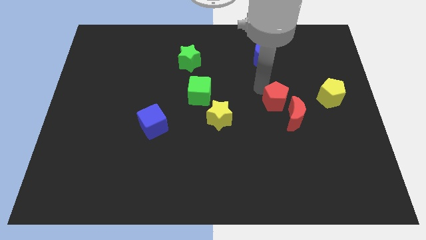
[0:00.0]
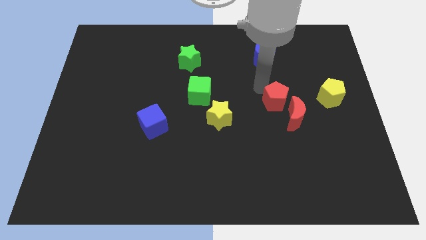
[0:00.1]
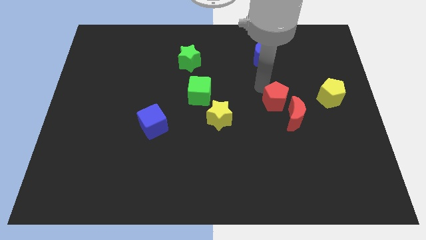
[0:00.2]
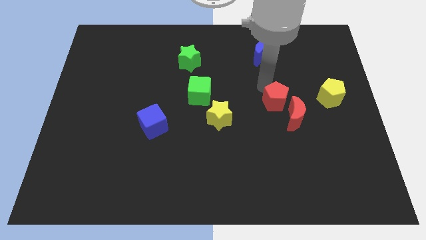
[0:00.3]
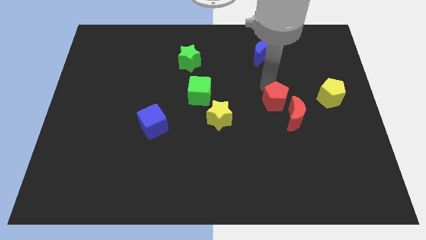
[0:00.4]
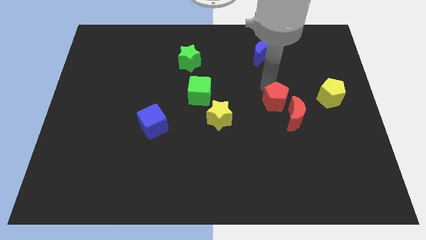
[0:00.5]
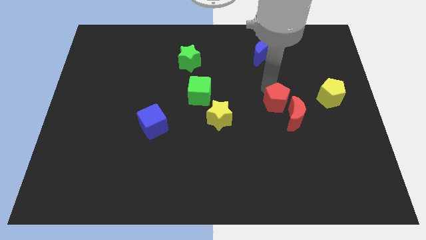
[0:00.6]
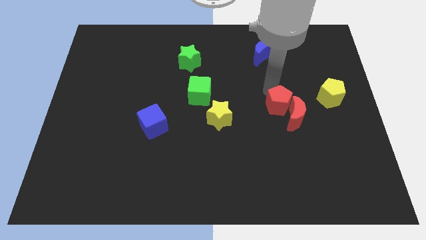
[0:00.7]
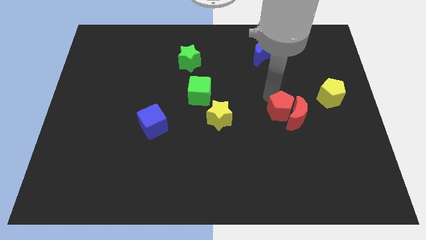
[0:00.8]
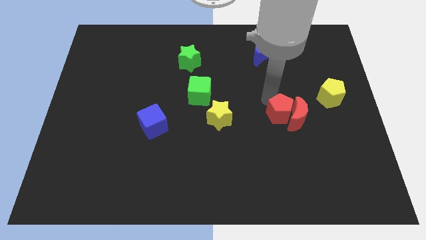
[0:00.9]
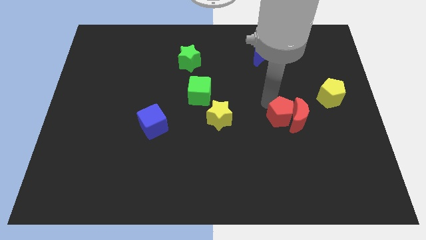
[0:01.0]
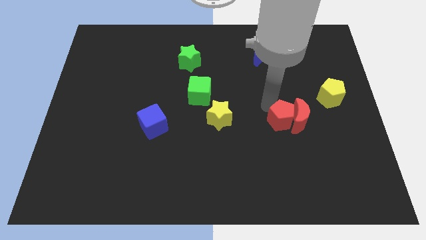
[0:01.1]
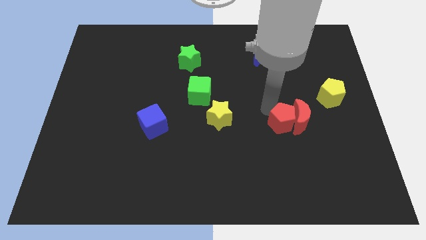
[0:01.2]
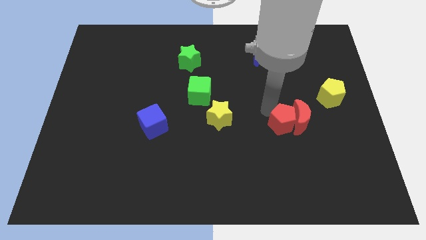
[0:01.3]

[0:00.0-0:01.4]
move the red pentagon into red crescent

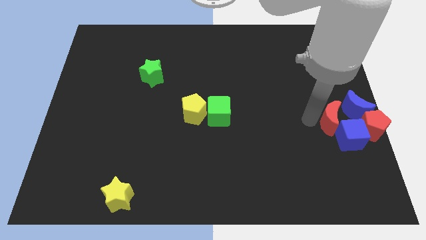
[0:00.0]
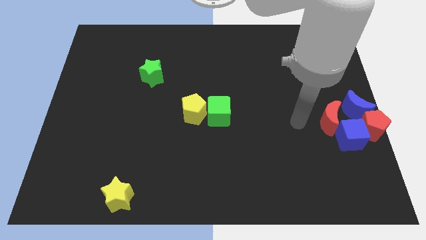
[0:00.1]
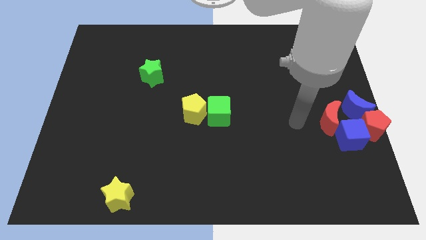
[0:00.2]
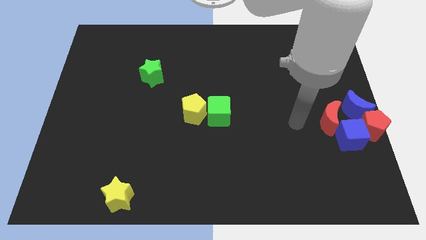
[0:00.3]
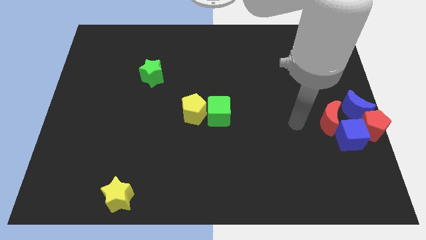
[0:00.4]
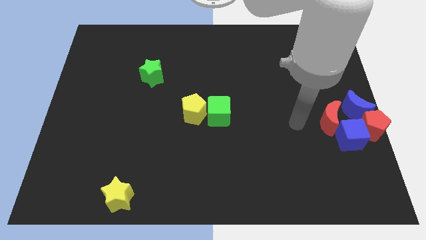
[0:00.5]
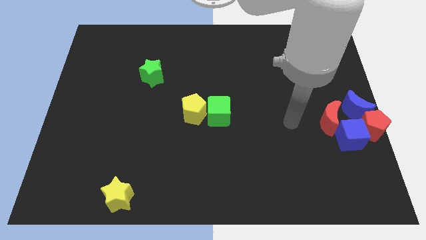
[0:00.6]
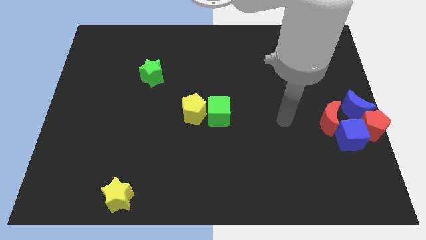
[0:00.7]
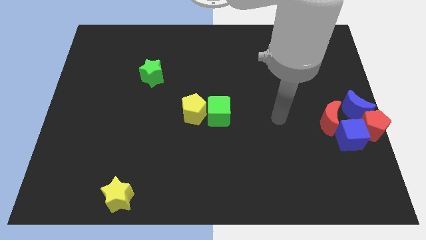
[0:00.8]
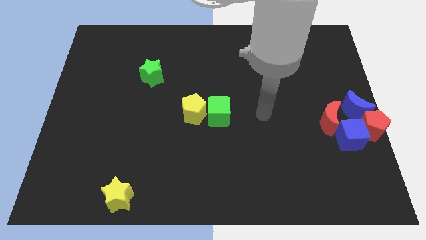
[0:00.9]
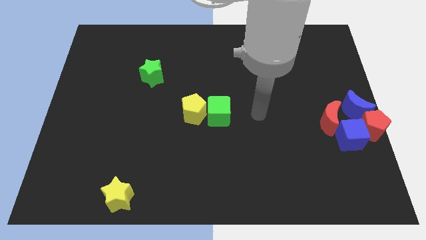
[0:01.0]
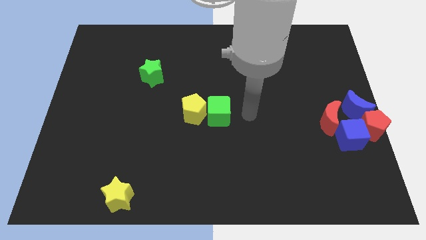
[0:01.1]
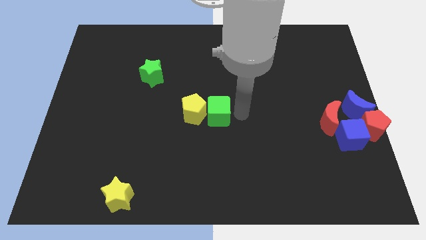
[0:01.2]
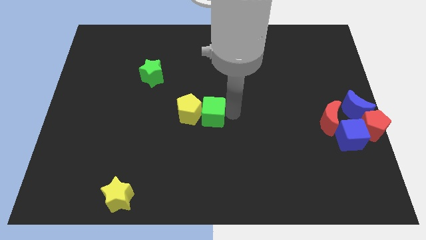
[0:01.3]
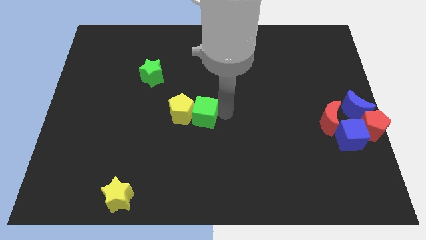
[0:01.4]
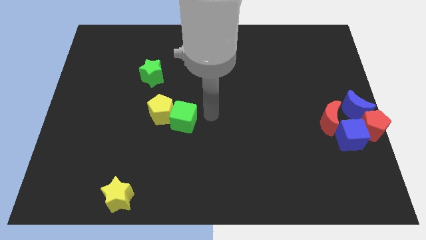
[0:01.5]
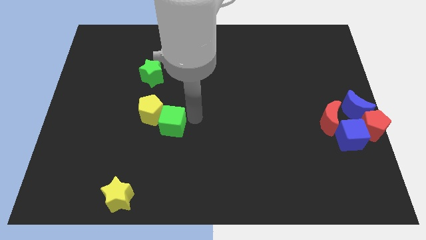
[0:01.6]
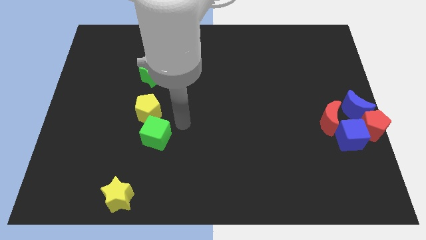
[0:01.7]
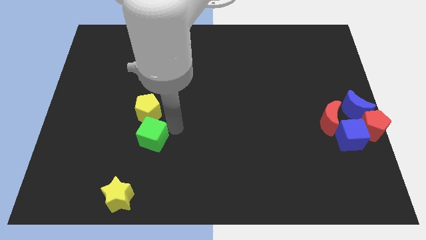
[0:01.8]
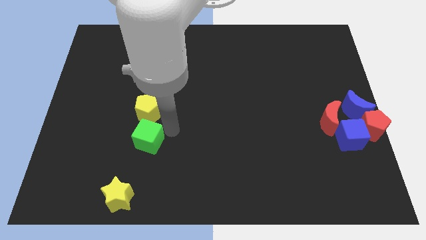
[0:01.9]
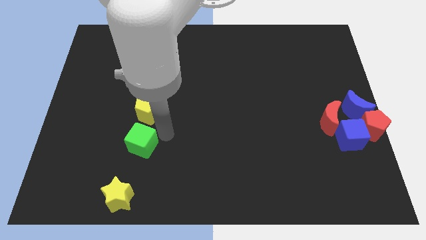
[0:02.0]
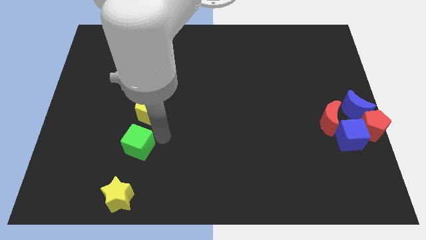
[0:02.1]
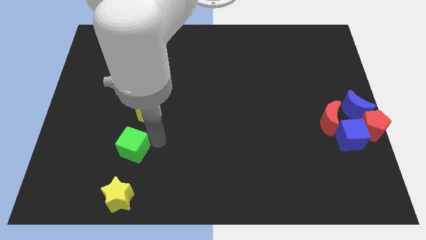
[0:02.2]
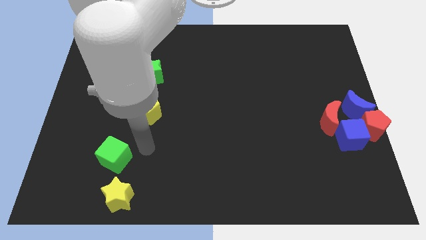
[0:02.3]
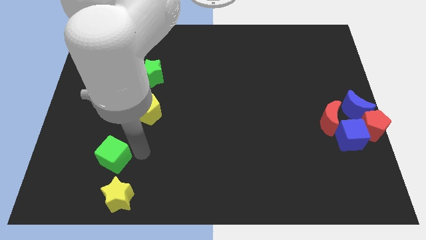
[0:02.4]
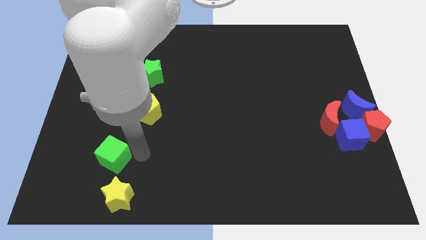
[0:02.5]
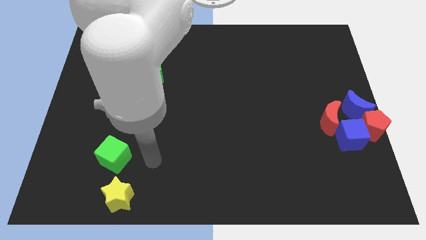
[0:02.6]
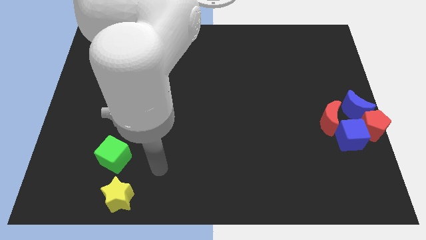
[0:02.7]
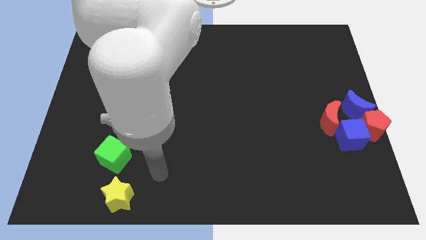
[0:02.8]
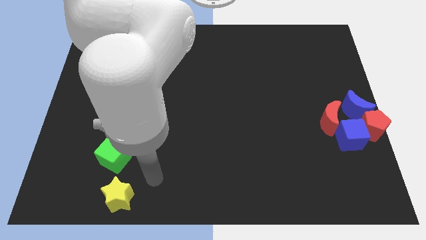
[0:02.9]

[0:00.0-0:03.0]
slide the yellow pentagon and the green cube to the left

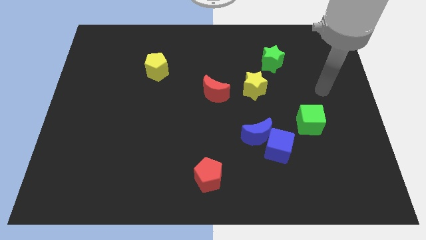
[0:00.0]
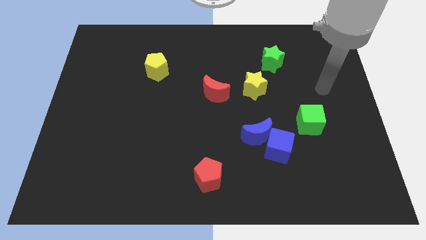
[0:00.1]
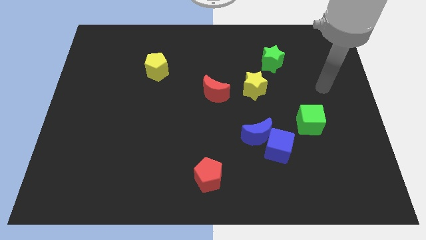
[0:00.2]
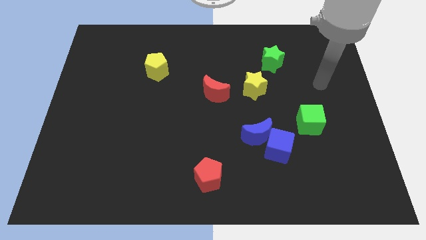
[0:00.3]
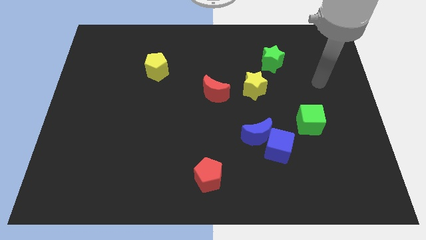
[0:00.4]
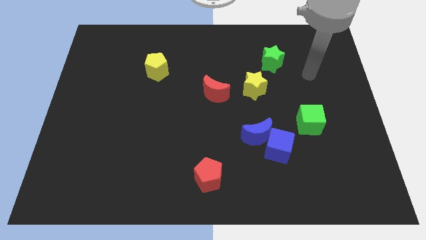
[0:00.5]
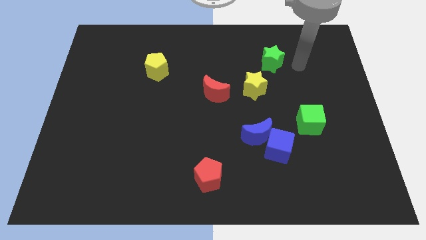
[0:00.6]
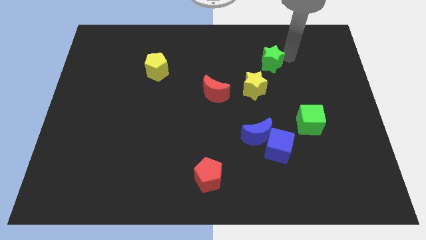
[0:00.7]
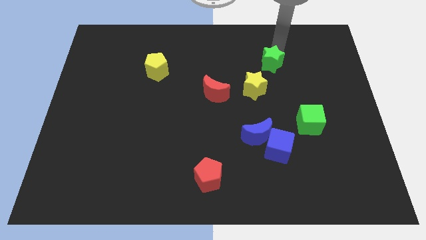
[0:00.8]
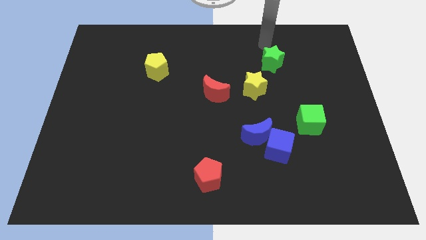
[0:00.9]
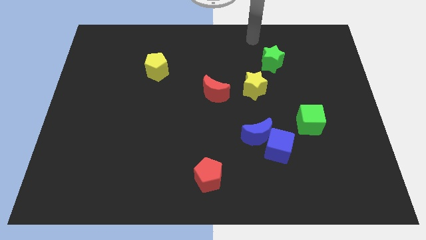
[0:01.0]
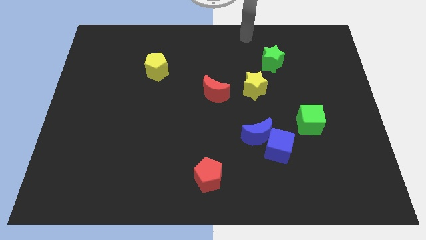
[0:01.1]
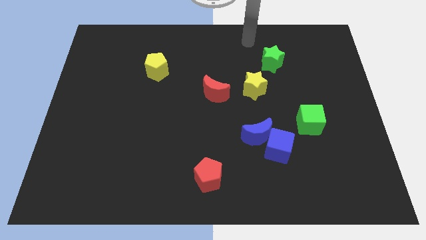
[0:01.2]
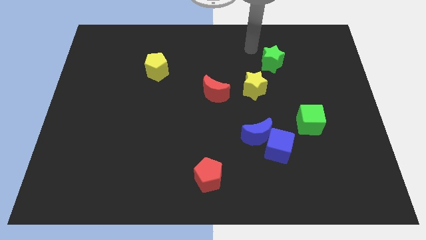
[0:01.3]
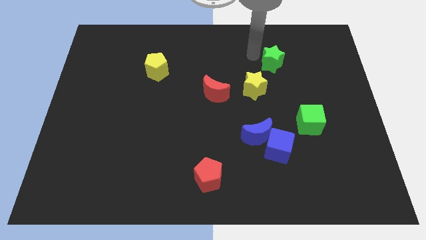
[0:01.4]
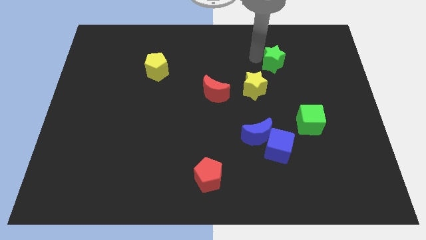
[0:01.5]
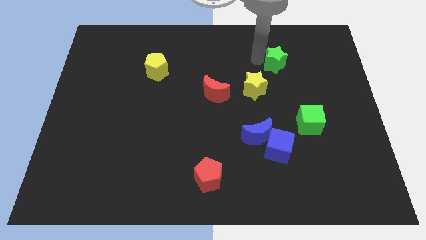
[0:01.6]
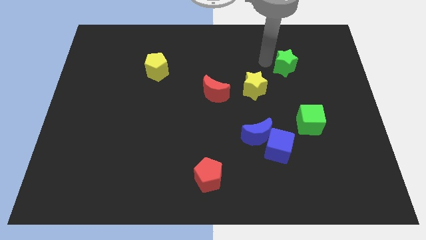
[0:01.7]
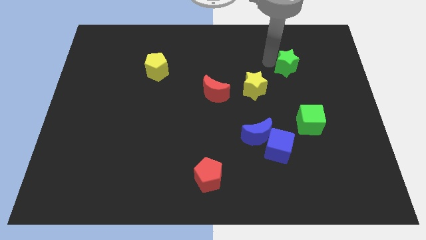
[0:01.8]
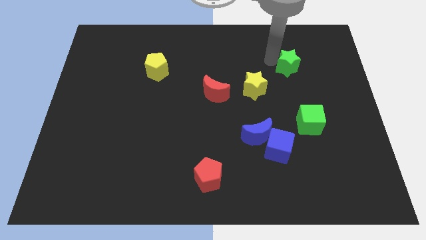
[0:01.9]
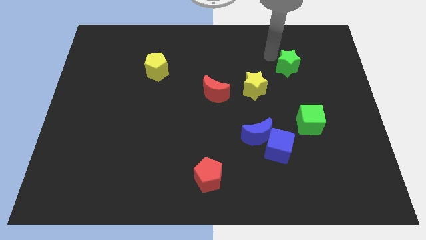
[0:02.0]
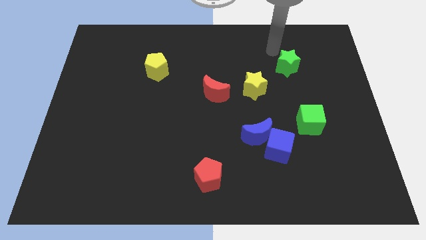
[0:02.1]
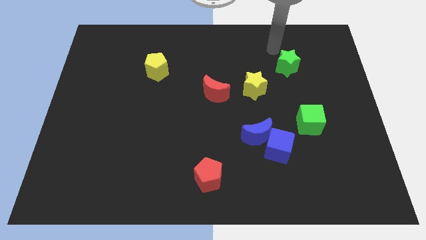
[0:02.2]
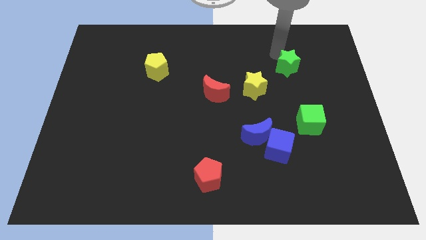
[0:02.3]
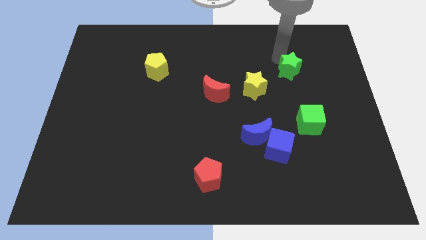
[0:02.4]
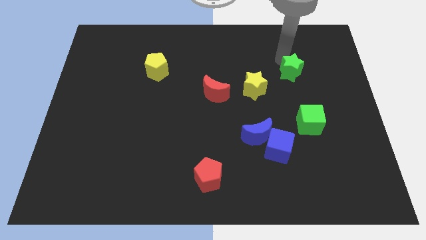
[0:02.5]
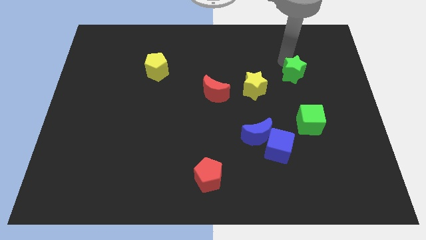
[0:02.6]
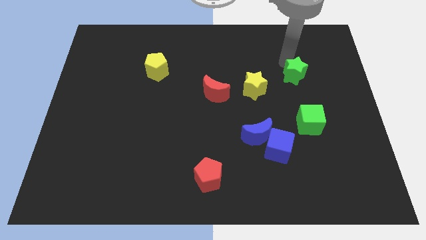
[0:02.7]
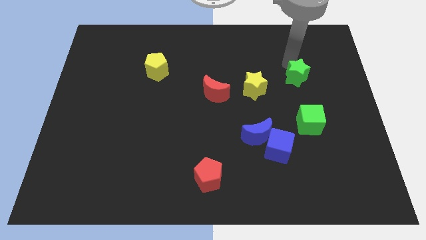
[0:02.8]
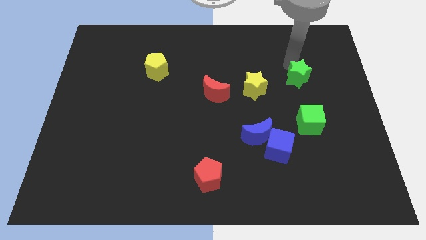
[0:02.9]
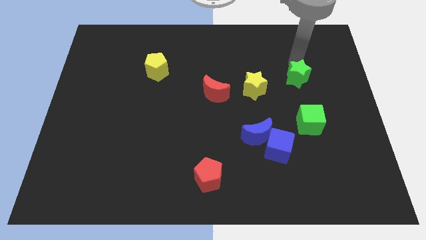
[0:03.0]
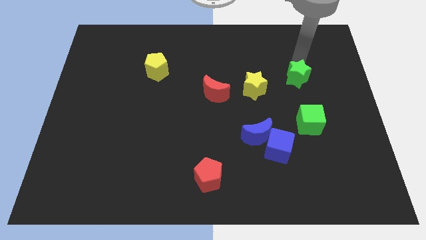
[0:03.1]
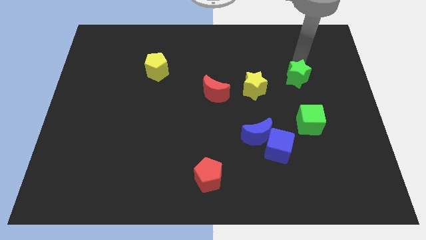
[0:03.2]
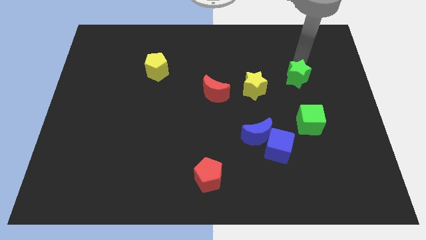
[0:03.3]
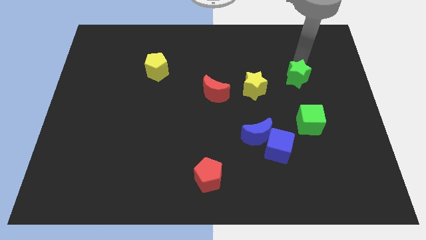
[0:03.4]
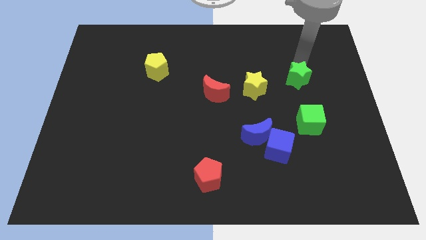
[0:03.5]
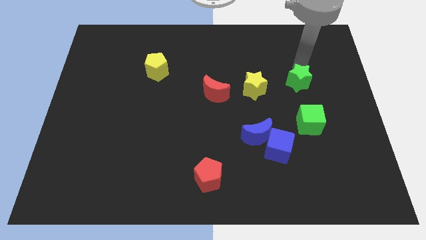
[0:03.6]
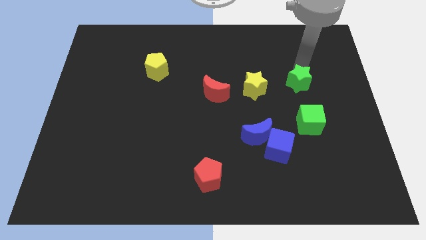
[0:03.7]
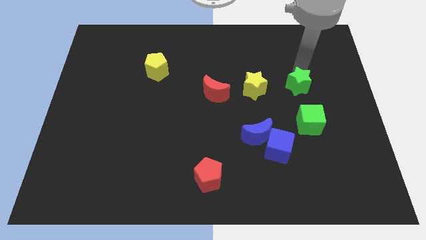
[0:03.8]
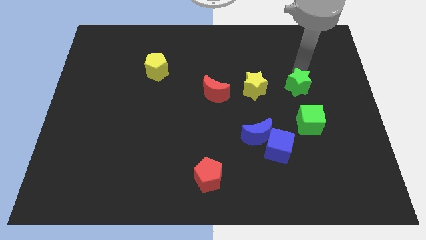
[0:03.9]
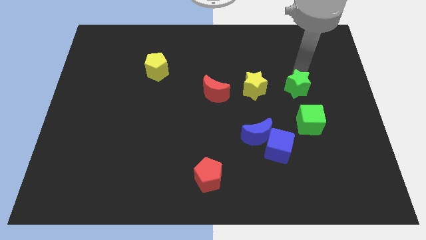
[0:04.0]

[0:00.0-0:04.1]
place the green star to the right of the yellow star

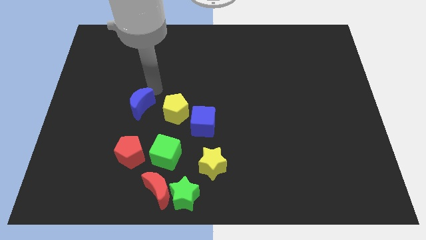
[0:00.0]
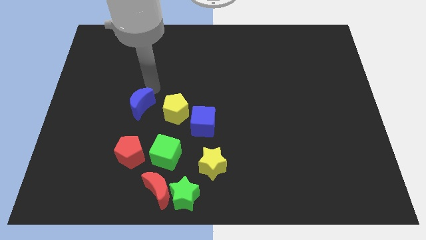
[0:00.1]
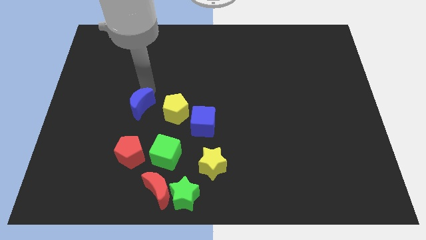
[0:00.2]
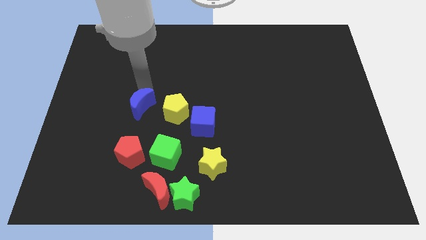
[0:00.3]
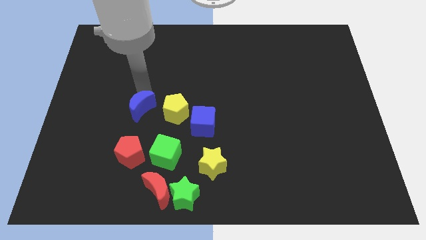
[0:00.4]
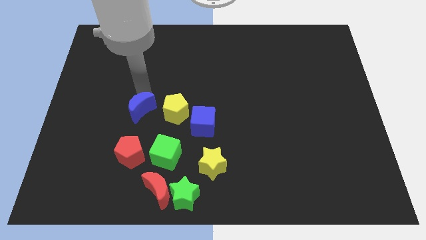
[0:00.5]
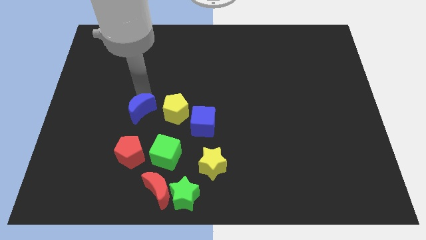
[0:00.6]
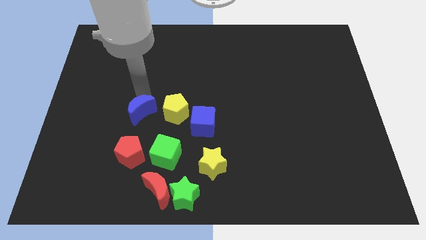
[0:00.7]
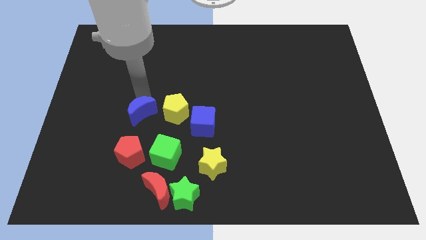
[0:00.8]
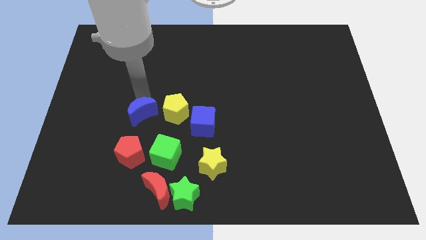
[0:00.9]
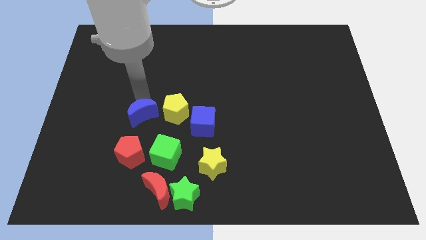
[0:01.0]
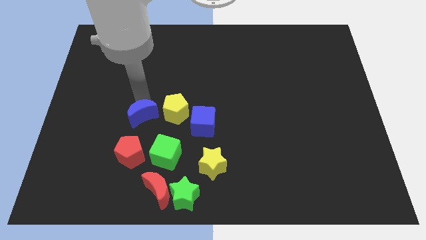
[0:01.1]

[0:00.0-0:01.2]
slightly move blue moon towards red pentagon
